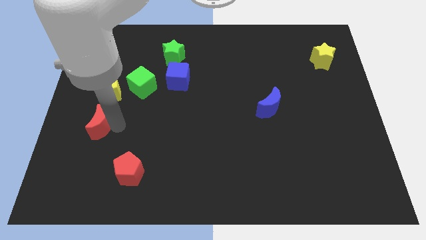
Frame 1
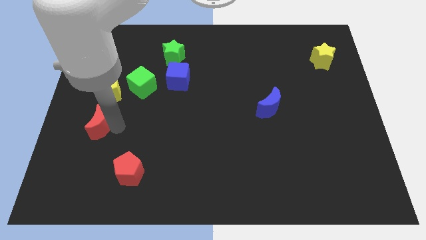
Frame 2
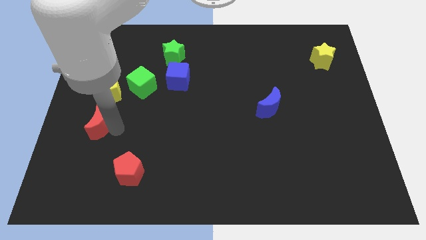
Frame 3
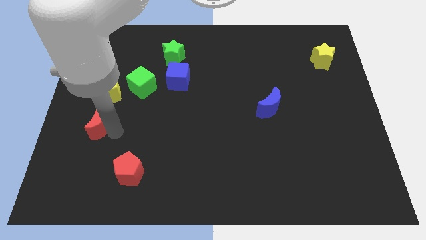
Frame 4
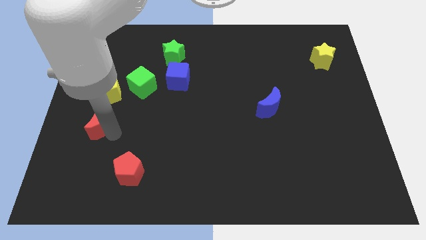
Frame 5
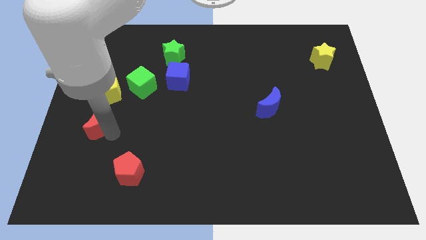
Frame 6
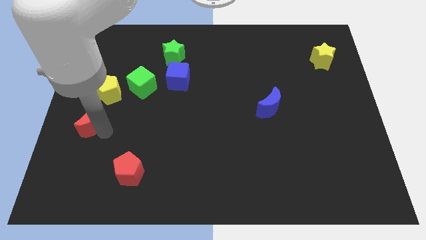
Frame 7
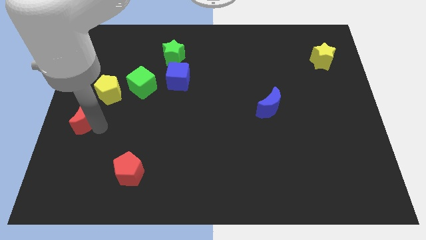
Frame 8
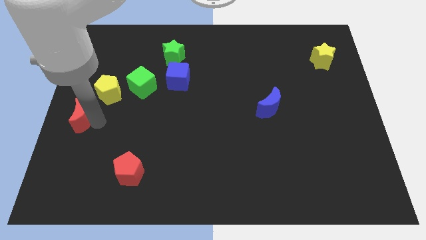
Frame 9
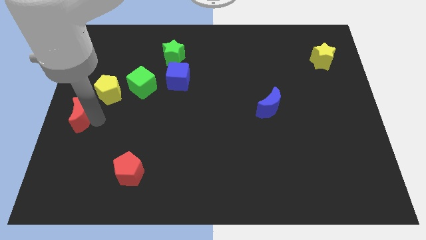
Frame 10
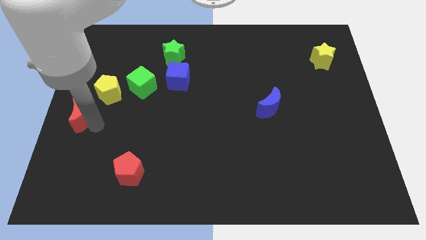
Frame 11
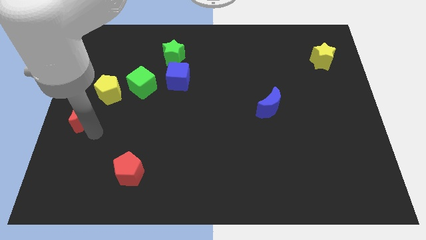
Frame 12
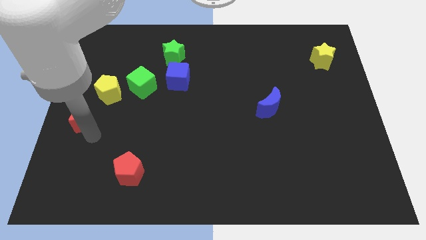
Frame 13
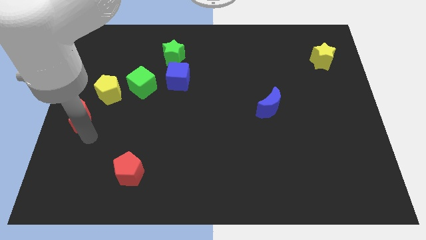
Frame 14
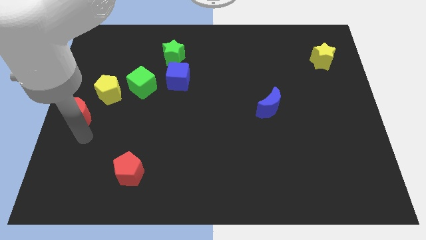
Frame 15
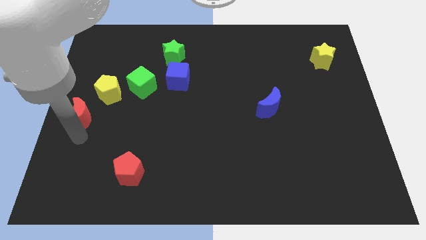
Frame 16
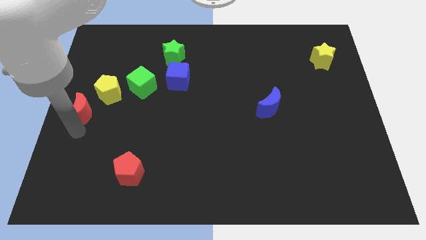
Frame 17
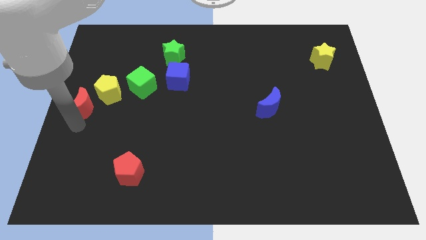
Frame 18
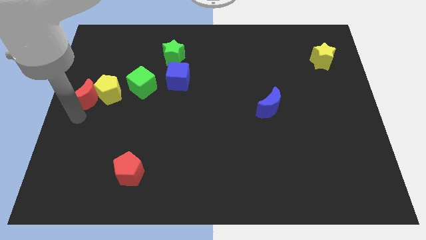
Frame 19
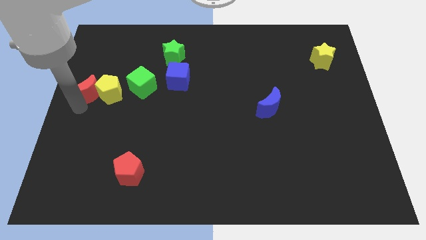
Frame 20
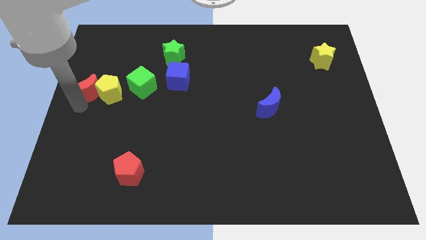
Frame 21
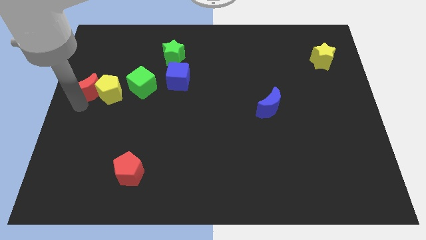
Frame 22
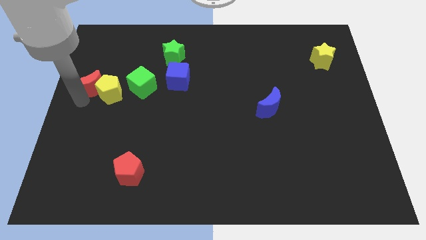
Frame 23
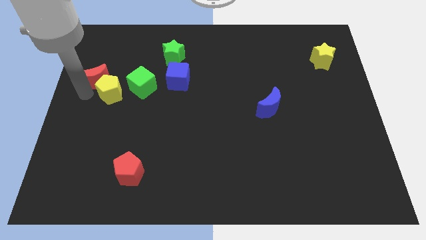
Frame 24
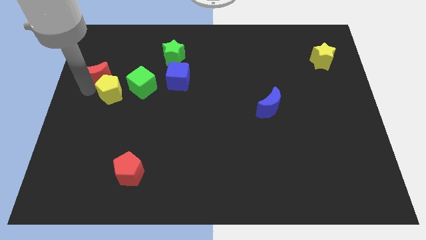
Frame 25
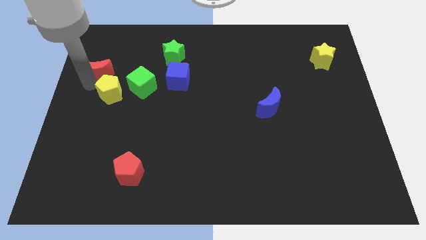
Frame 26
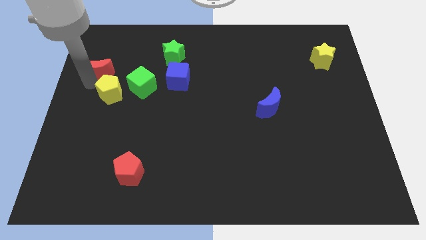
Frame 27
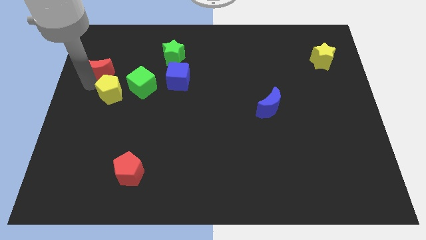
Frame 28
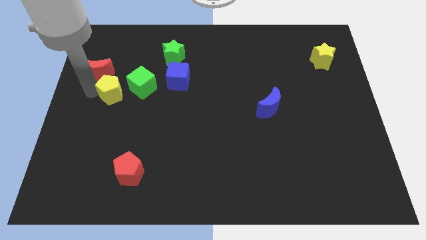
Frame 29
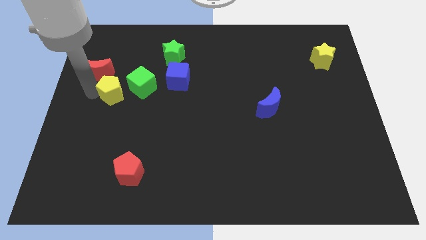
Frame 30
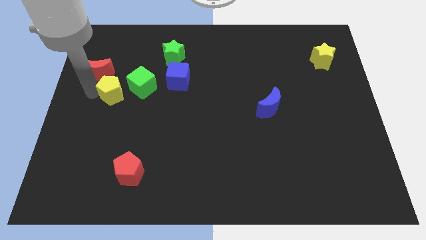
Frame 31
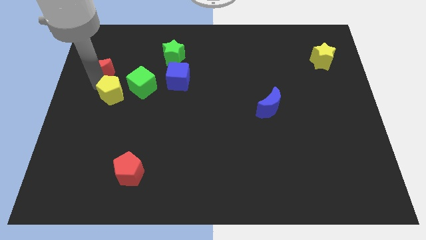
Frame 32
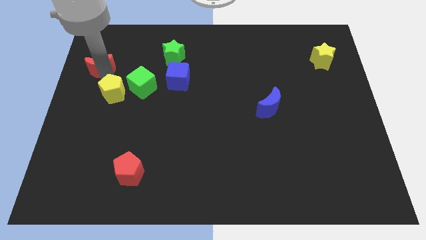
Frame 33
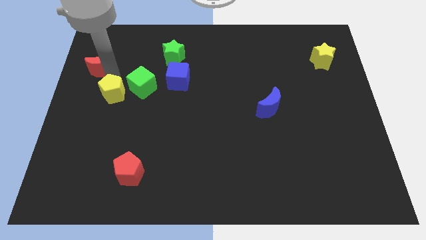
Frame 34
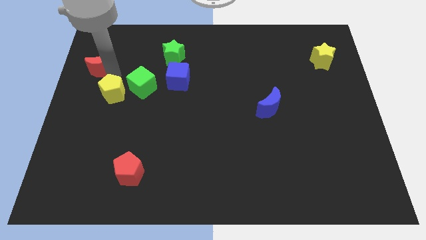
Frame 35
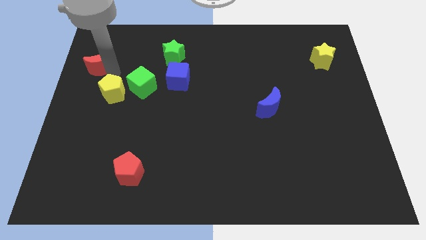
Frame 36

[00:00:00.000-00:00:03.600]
push the red crescent above the yellow penatgon

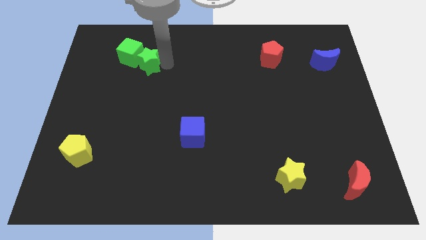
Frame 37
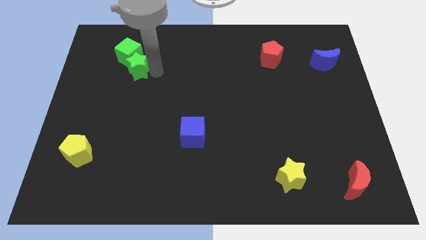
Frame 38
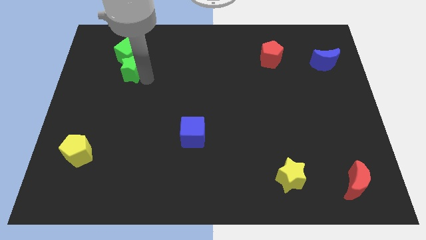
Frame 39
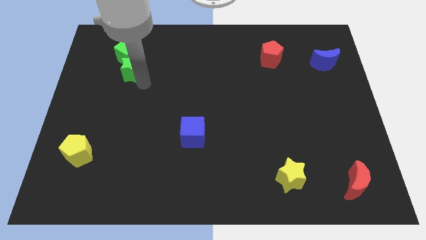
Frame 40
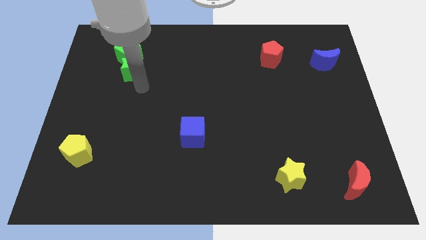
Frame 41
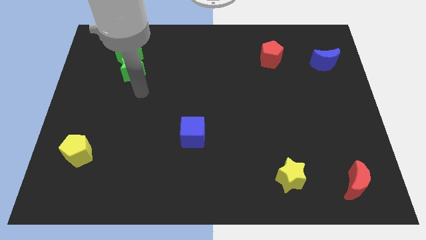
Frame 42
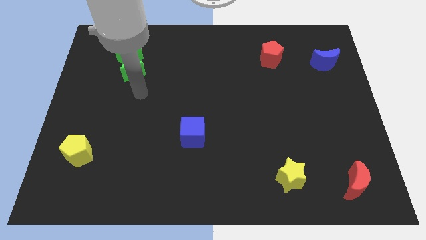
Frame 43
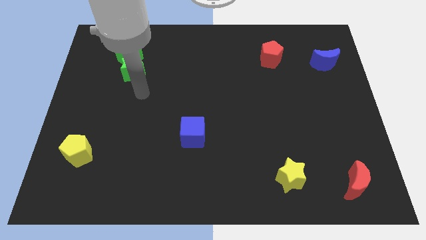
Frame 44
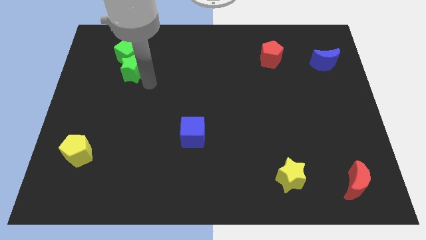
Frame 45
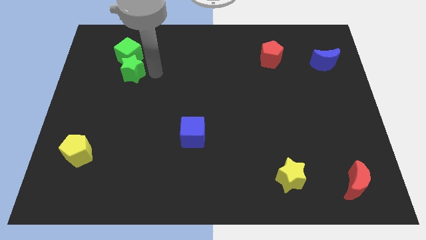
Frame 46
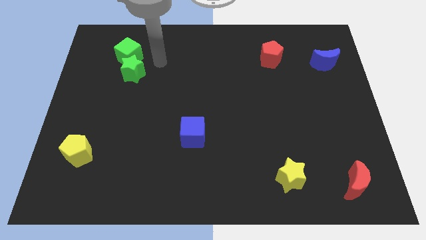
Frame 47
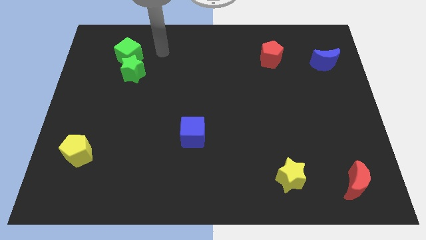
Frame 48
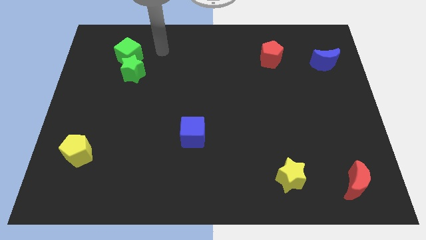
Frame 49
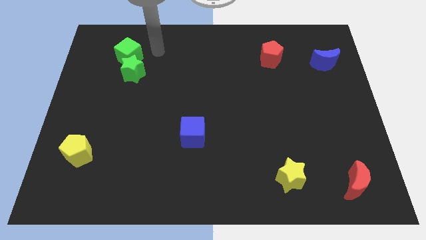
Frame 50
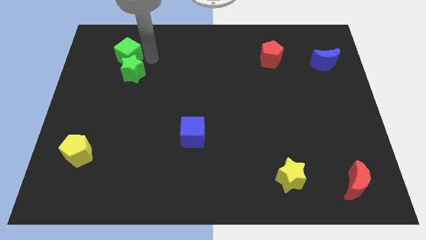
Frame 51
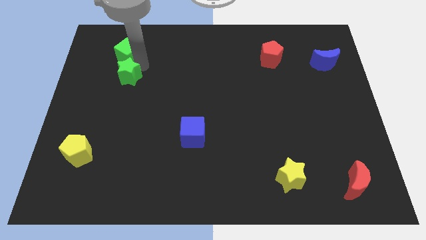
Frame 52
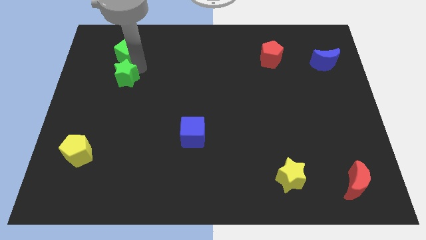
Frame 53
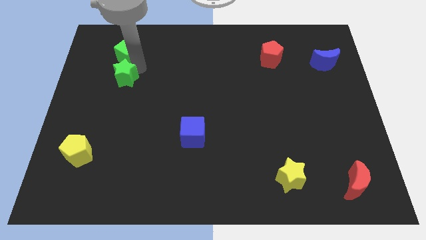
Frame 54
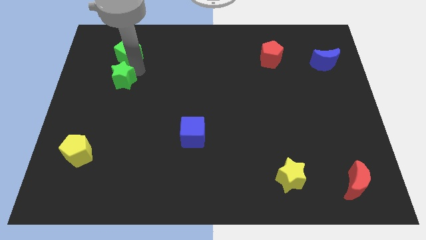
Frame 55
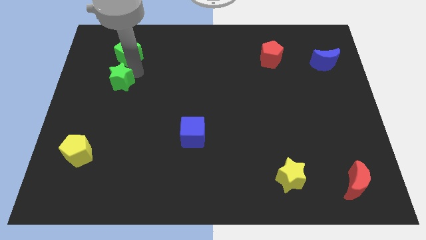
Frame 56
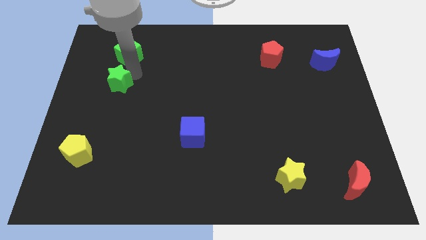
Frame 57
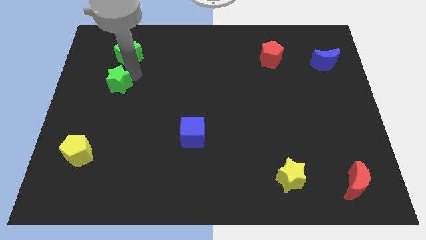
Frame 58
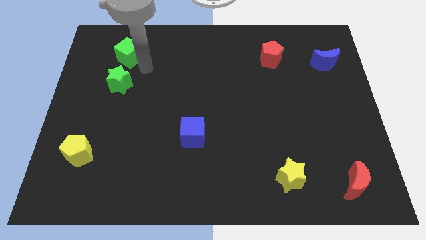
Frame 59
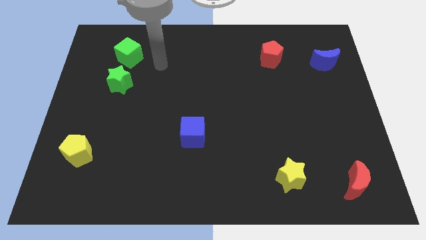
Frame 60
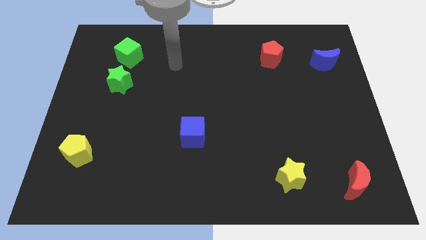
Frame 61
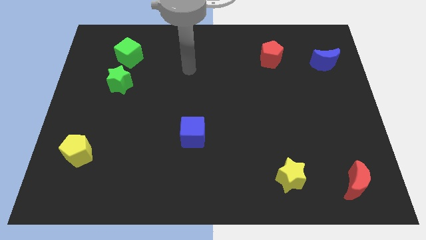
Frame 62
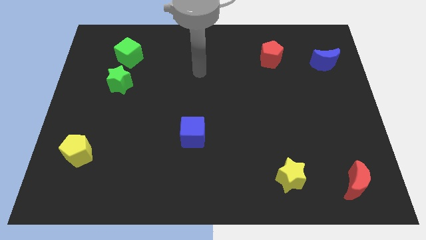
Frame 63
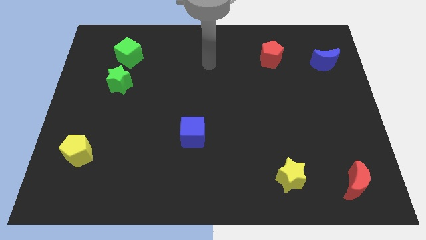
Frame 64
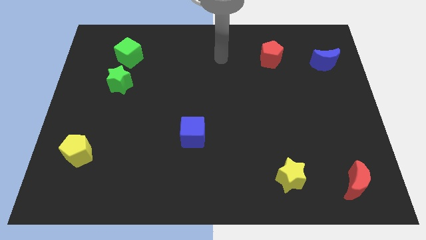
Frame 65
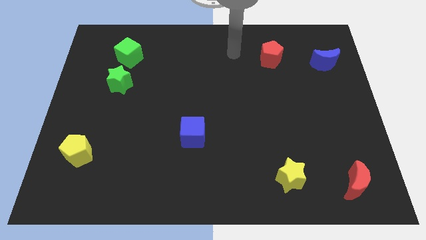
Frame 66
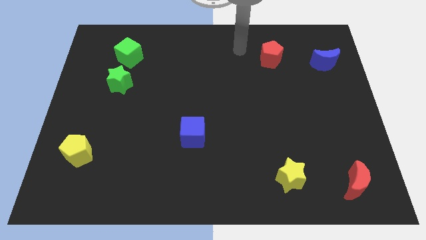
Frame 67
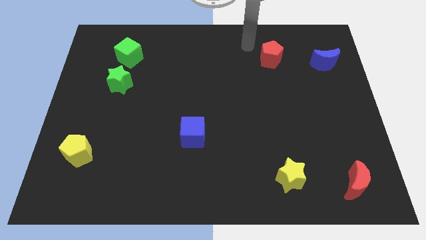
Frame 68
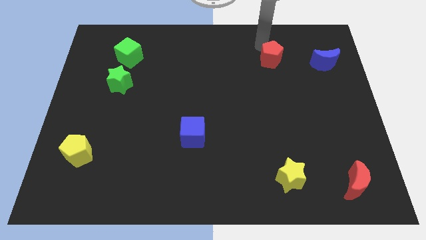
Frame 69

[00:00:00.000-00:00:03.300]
slightly move the green star below green cube

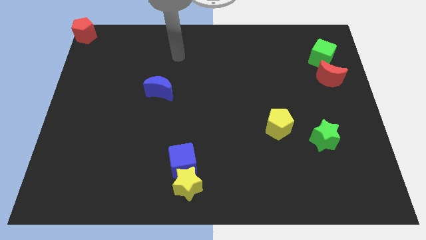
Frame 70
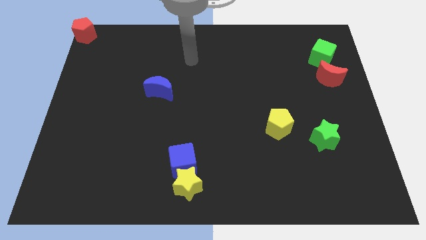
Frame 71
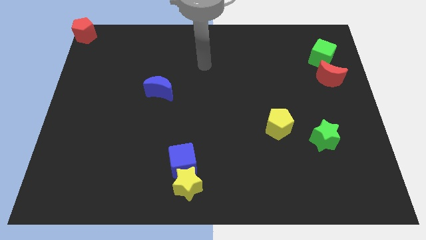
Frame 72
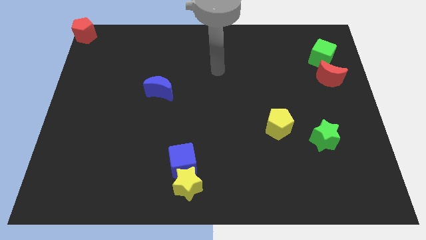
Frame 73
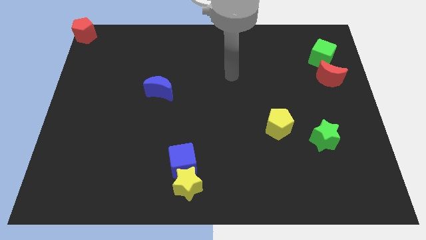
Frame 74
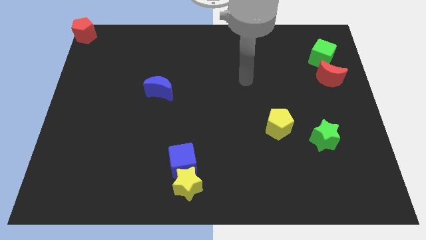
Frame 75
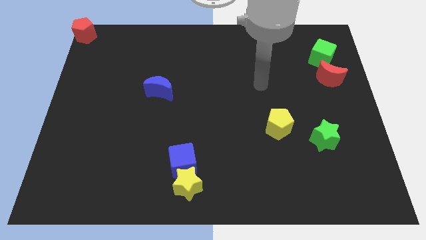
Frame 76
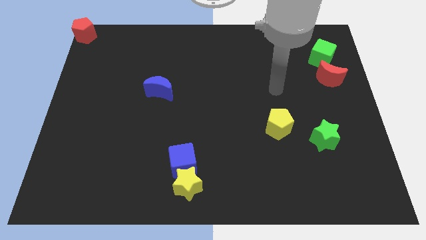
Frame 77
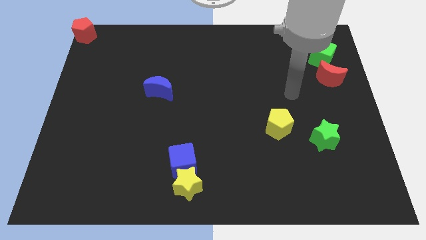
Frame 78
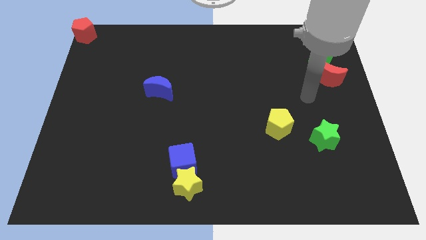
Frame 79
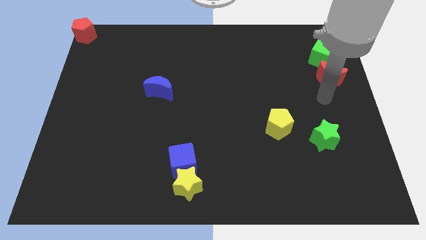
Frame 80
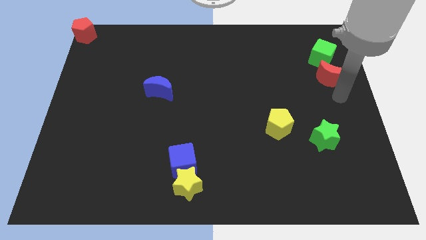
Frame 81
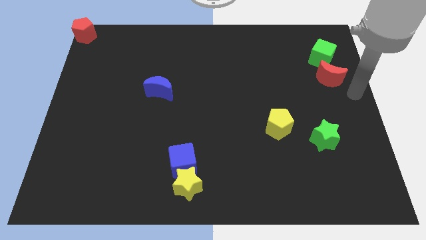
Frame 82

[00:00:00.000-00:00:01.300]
move your arm to the bottom of the red crescent

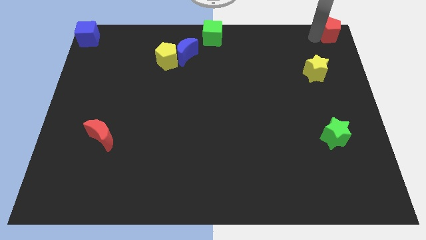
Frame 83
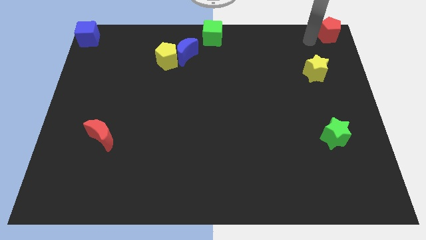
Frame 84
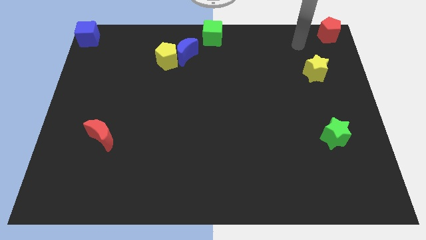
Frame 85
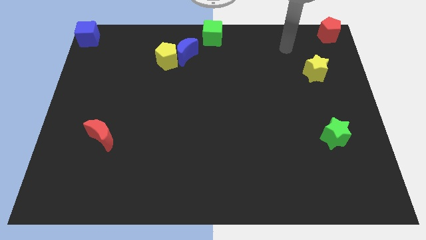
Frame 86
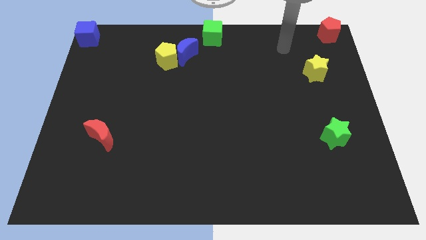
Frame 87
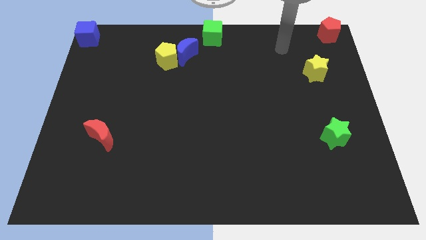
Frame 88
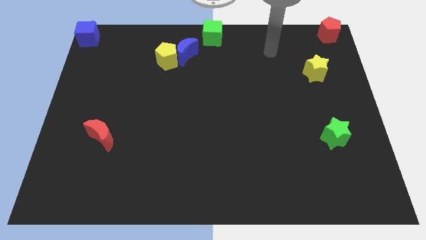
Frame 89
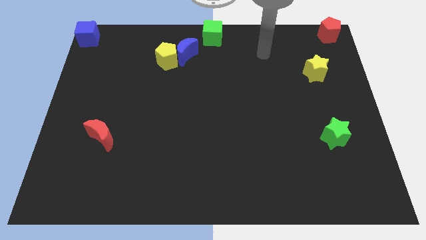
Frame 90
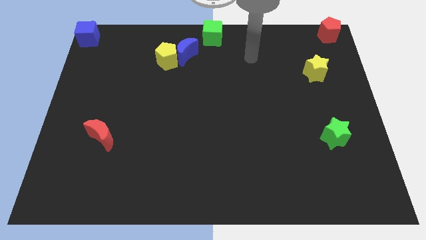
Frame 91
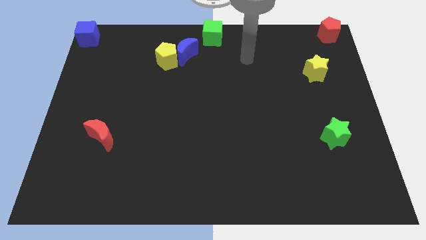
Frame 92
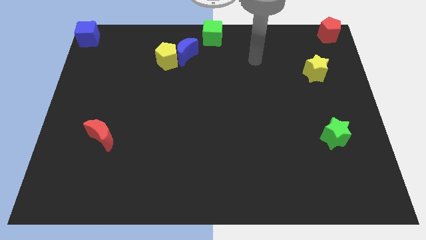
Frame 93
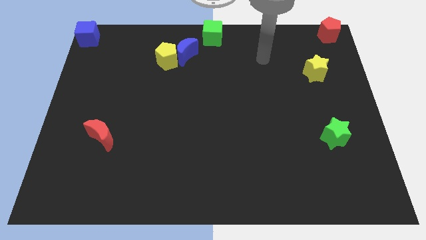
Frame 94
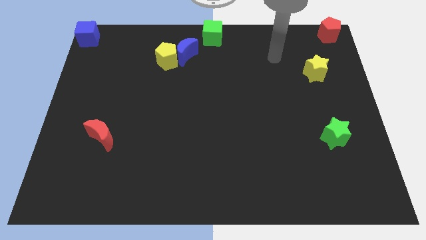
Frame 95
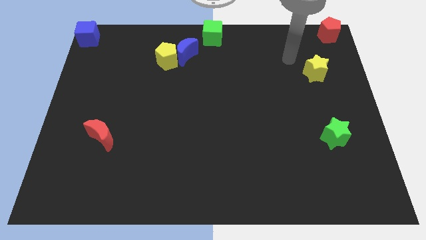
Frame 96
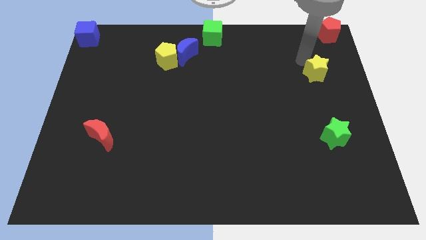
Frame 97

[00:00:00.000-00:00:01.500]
place your arm at the top left side of yellow star
